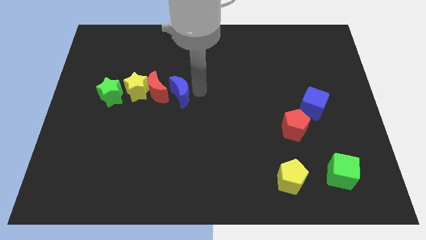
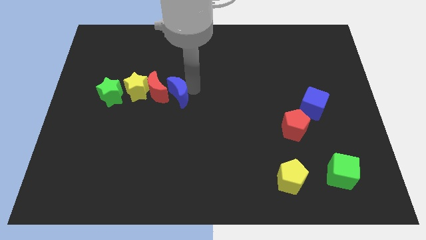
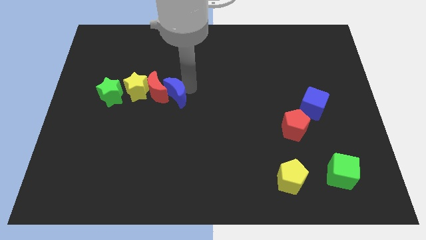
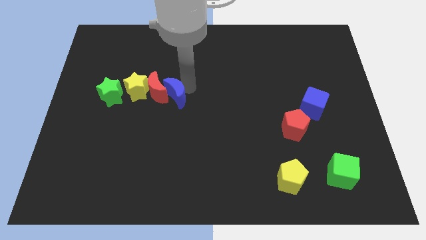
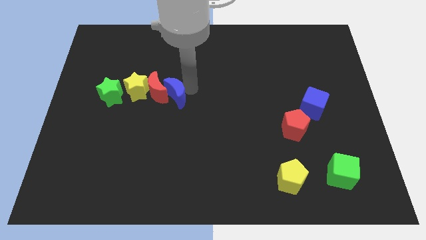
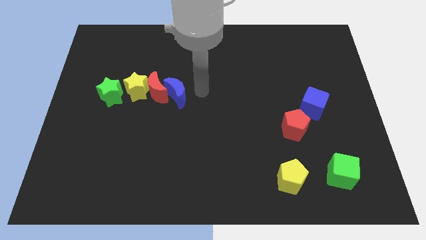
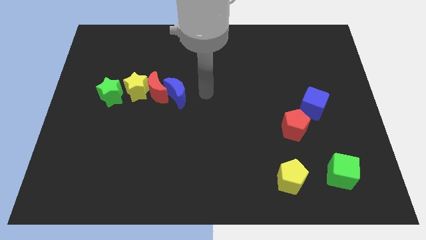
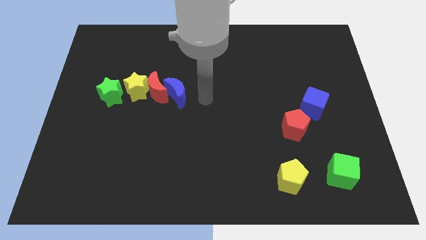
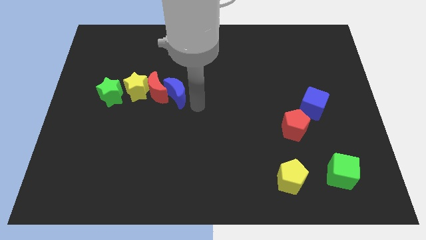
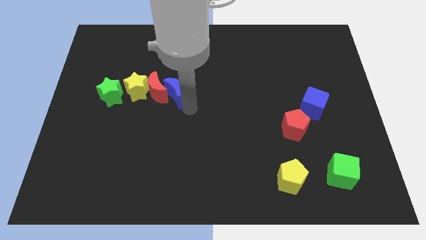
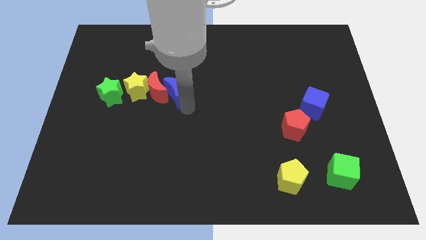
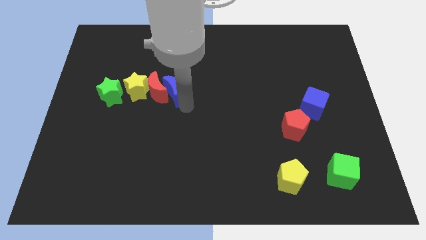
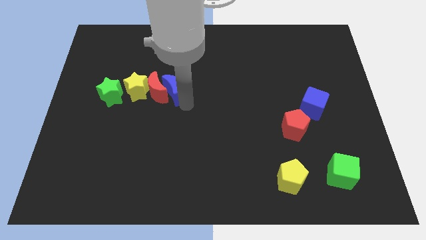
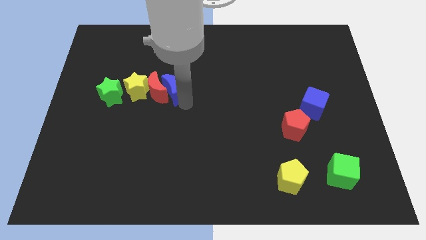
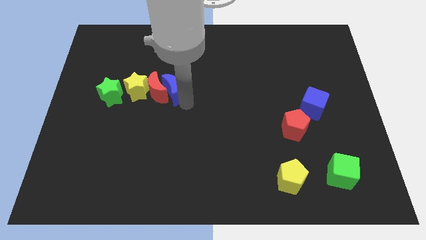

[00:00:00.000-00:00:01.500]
put the blue moon right to the red moon

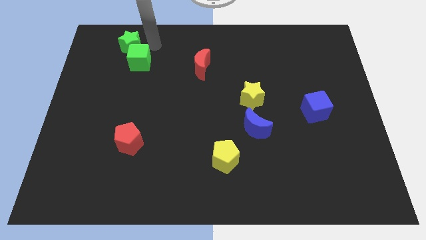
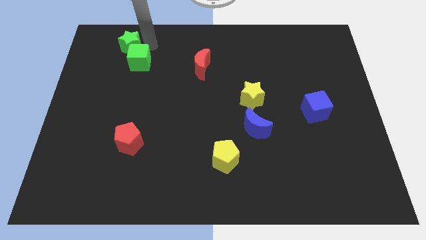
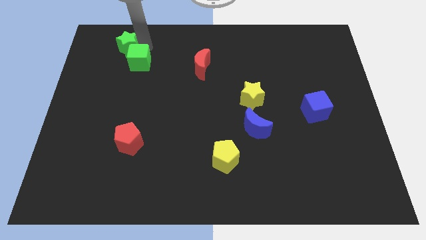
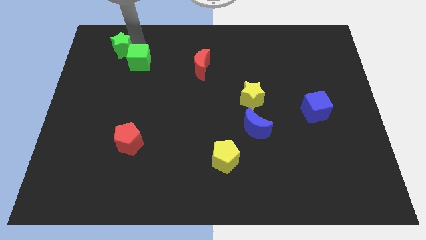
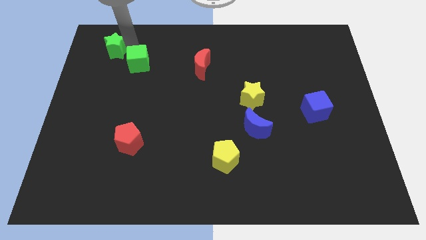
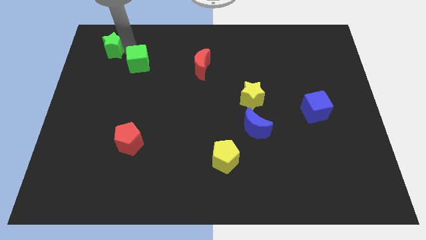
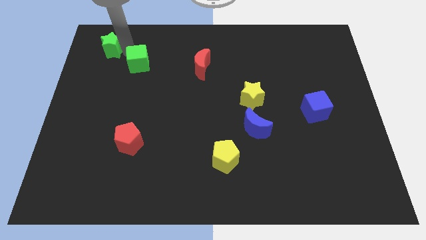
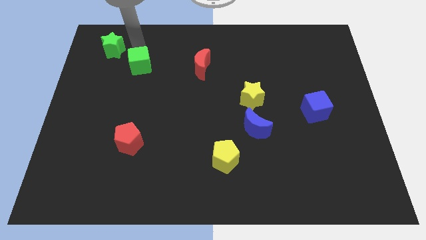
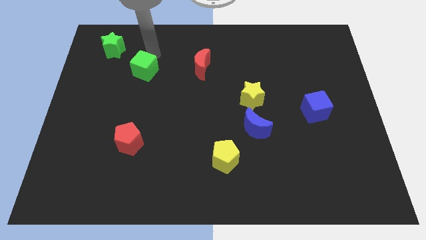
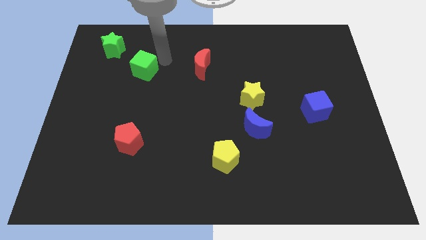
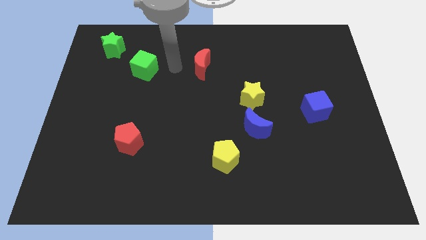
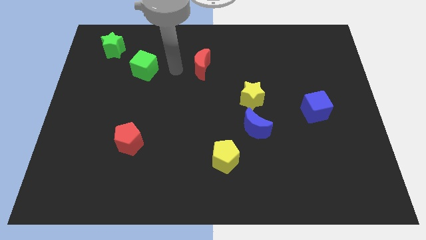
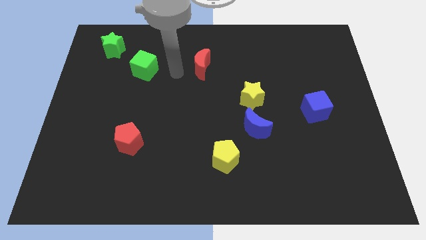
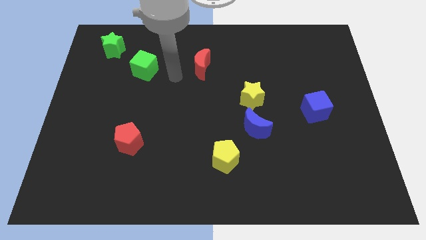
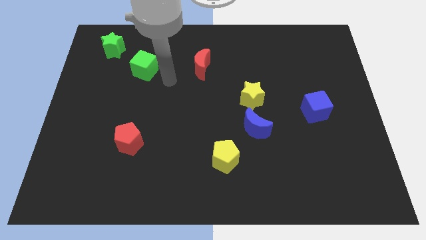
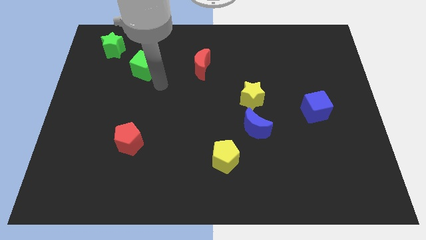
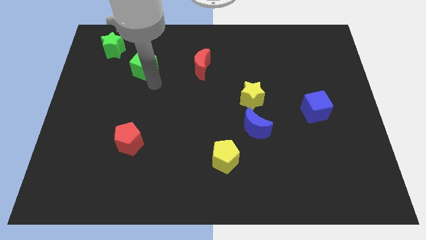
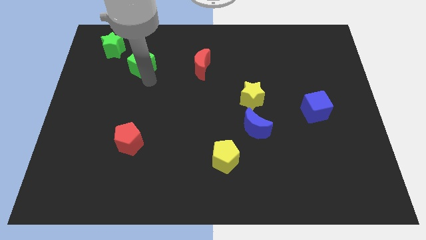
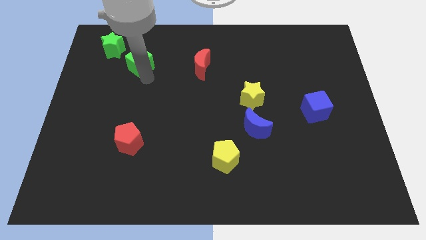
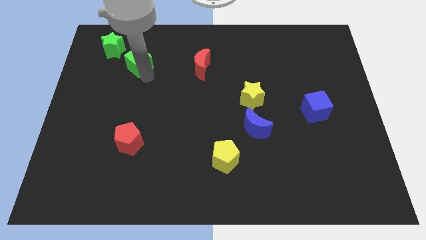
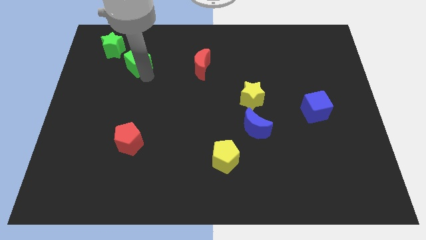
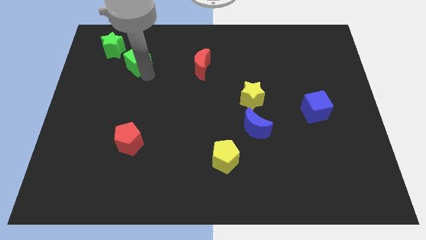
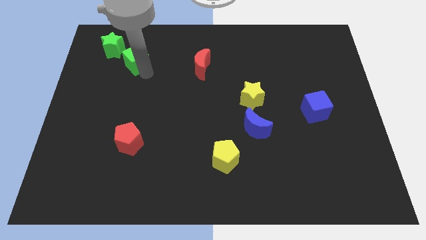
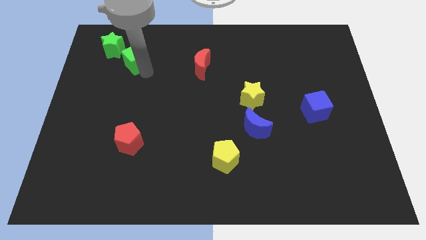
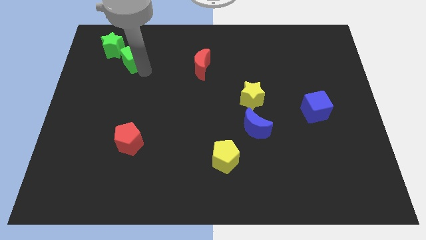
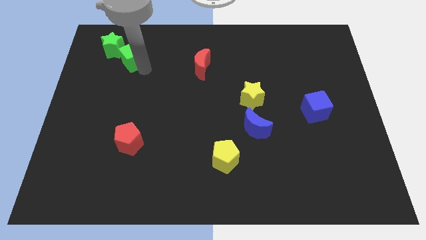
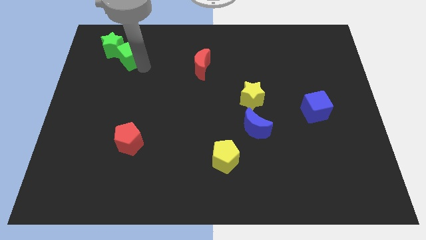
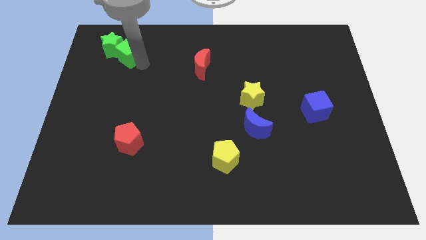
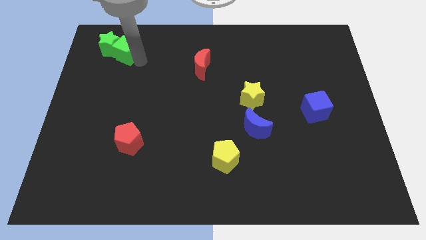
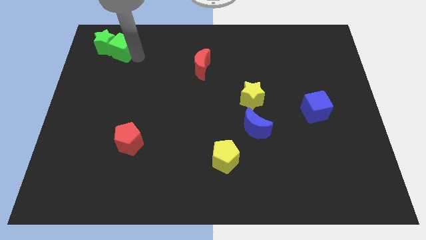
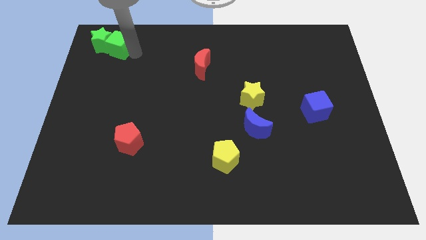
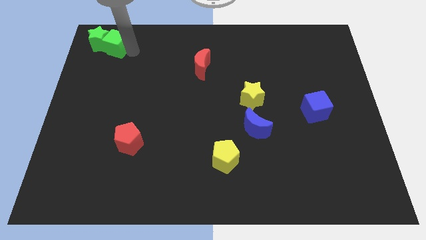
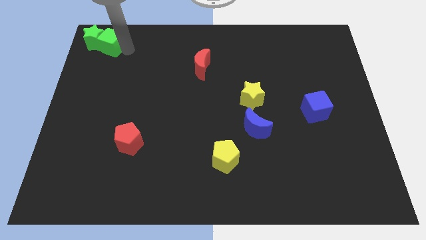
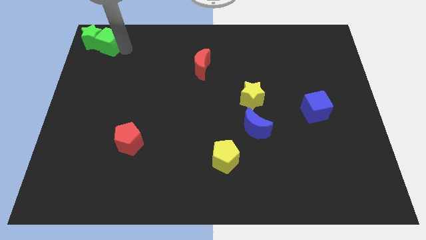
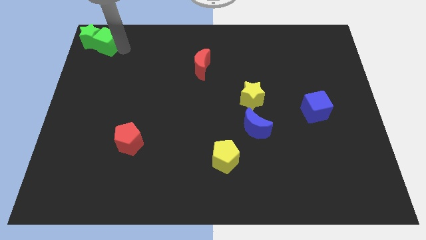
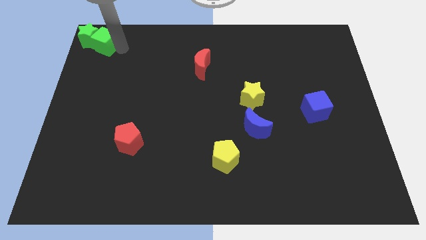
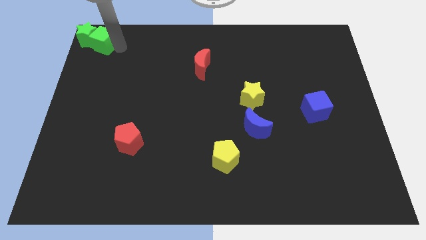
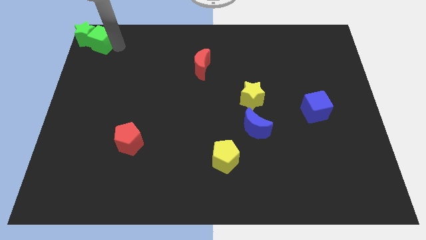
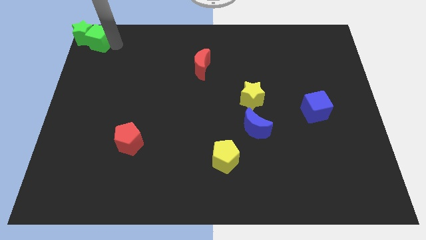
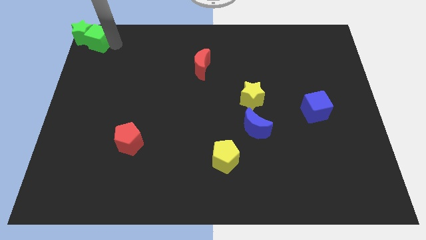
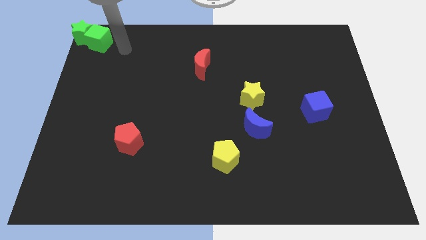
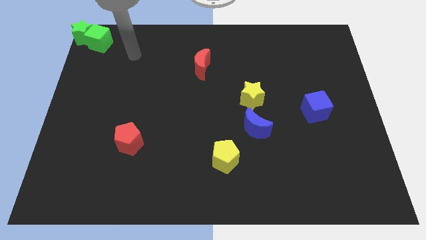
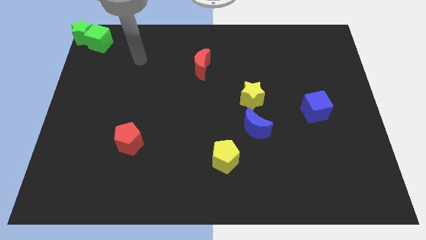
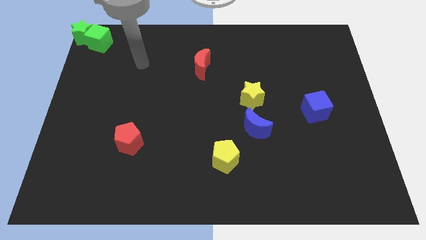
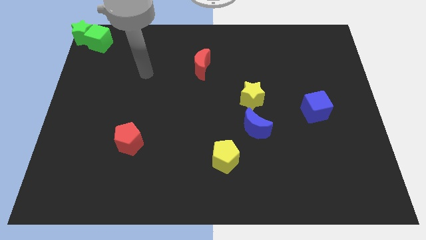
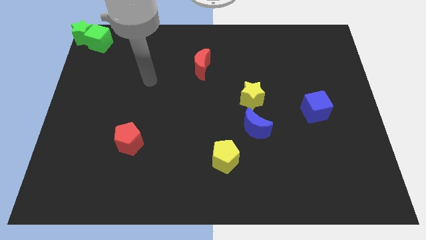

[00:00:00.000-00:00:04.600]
push the green star to the top left corner with the green cube

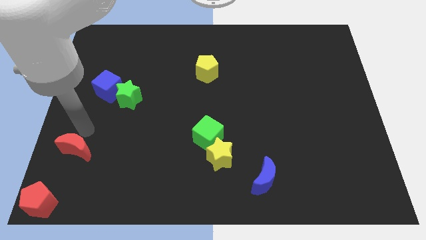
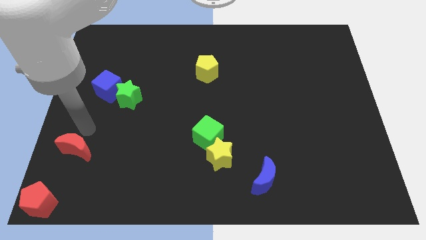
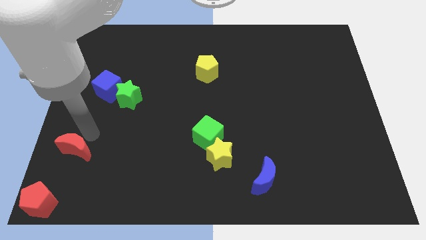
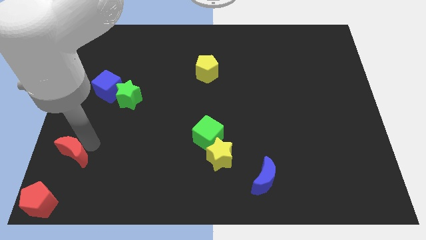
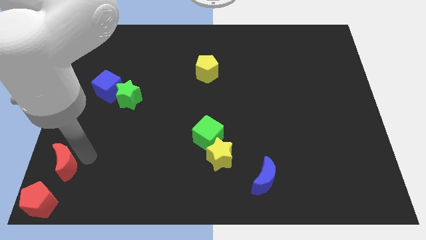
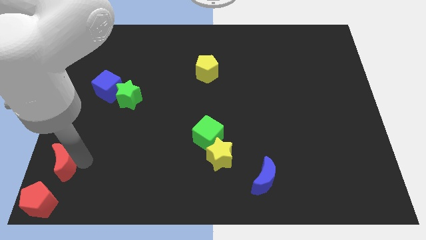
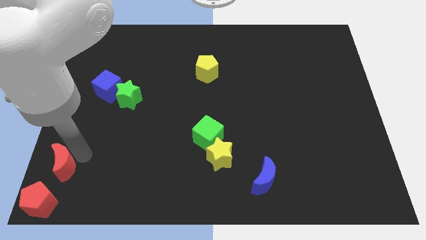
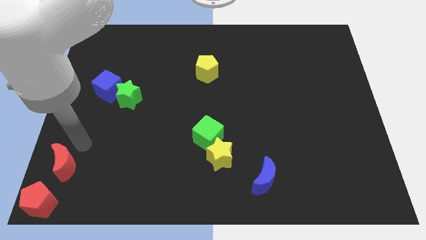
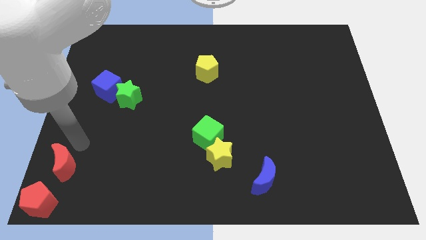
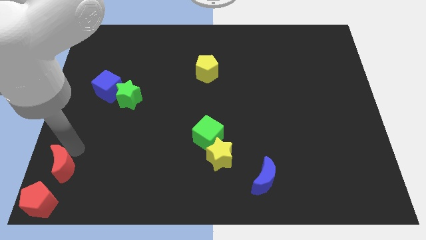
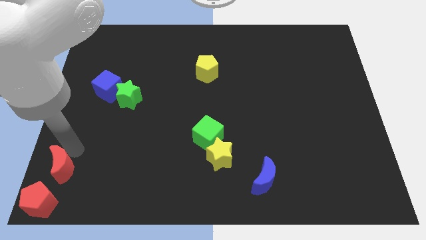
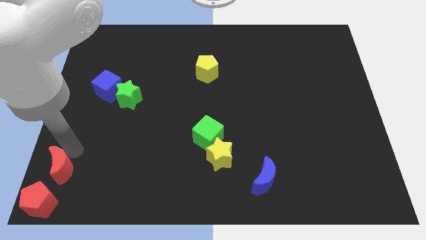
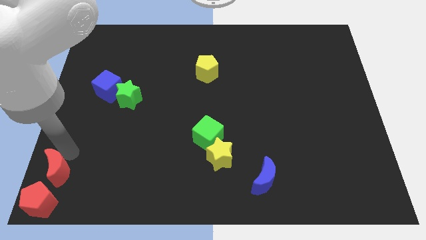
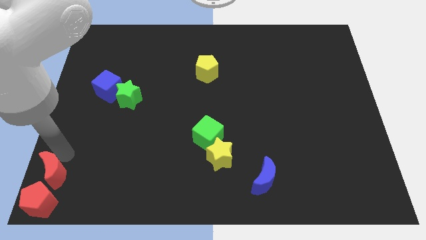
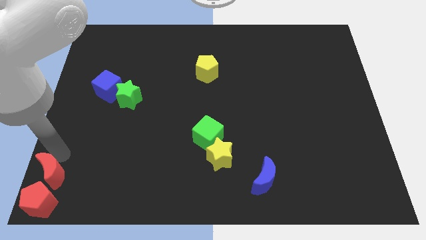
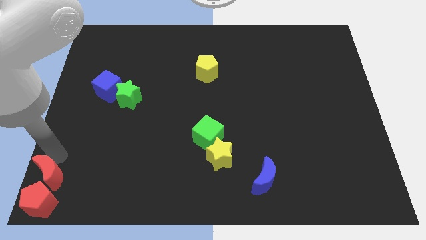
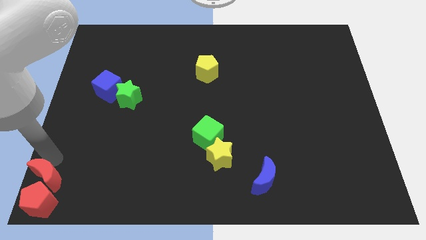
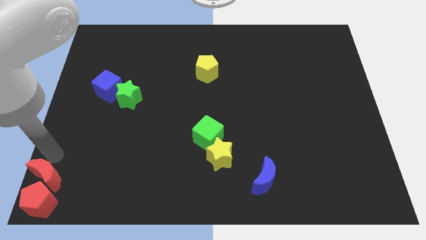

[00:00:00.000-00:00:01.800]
move the red crescent towards the bottom left

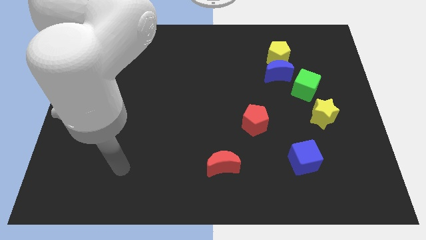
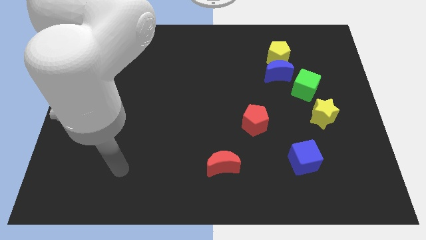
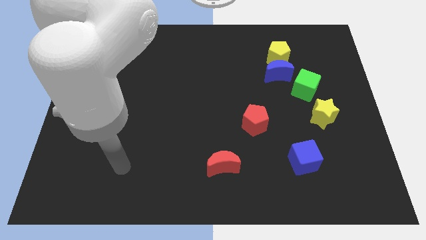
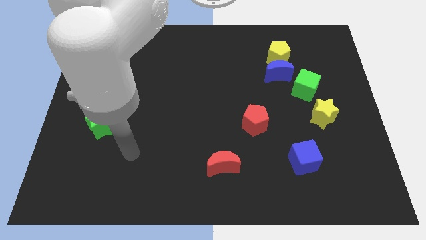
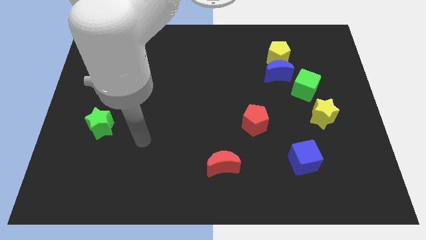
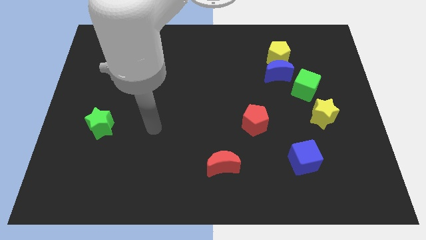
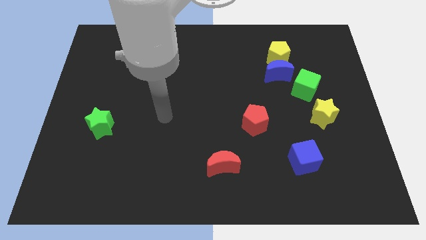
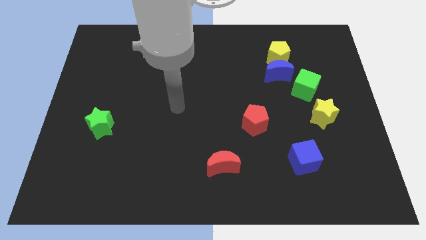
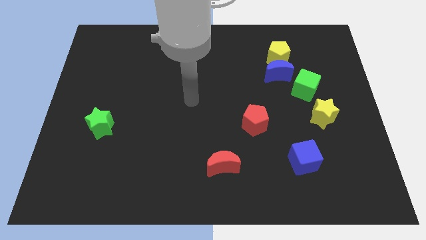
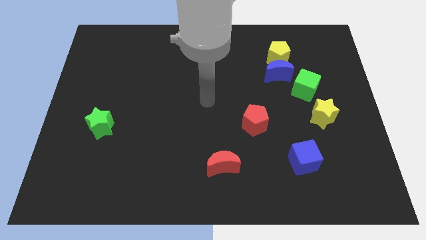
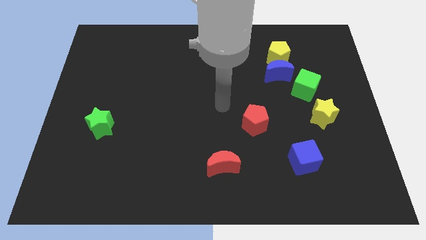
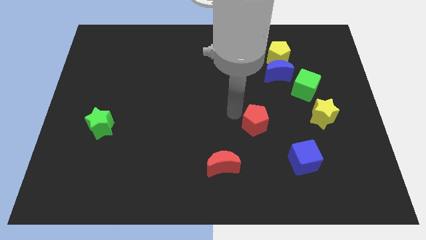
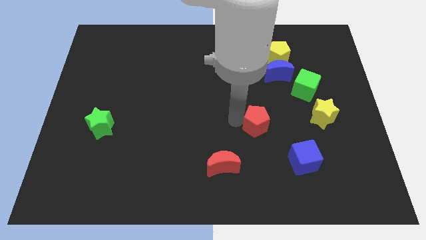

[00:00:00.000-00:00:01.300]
move your arm close to the left side of the red pentagon
